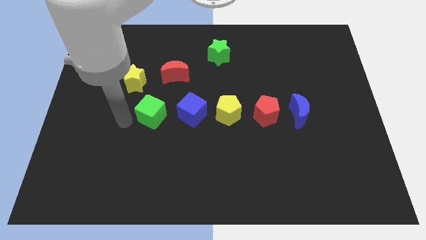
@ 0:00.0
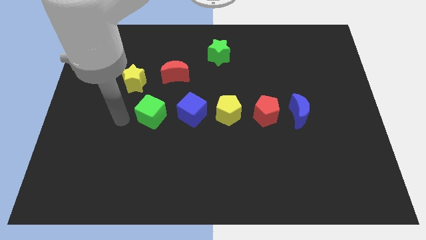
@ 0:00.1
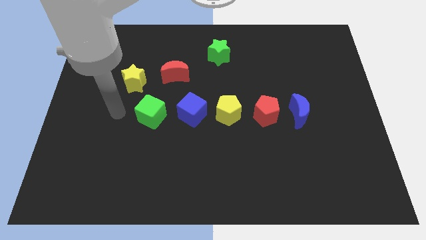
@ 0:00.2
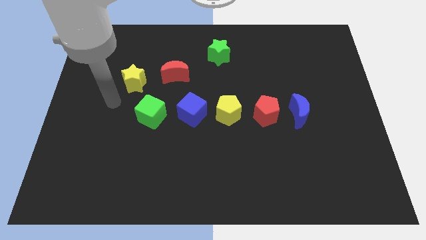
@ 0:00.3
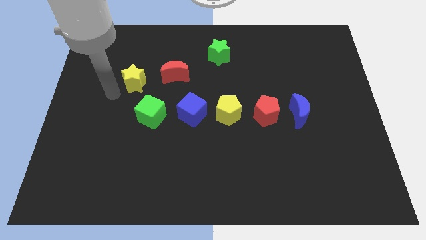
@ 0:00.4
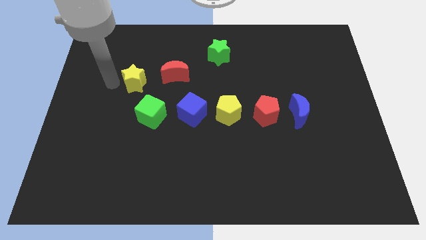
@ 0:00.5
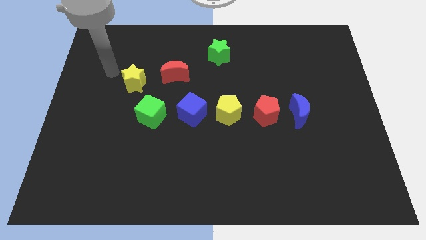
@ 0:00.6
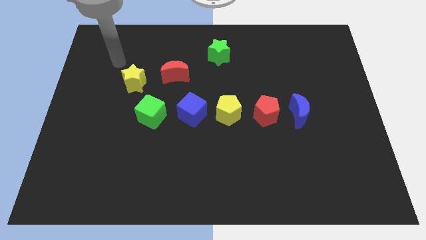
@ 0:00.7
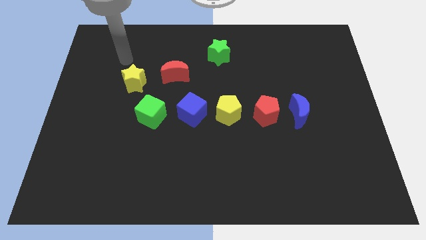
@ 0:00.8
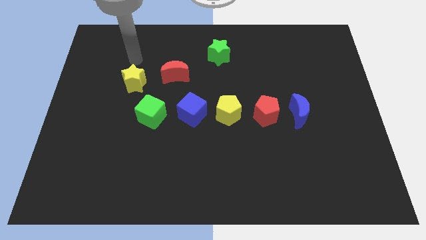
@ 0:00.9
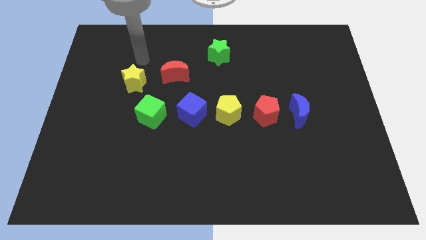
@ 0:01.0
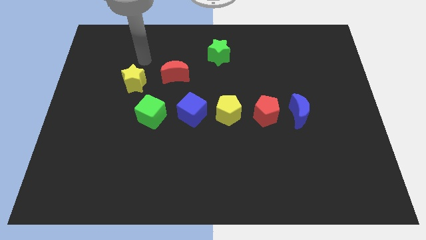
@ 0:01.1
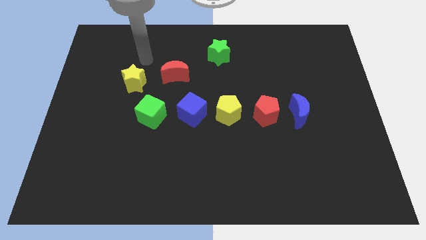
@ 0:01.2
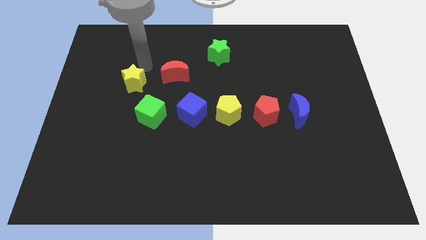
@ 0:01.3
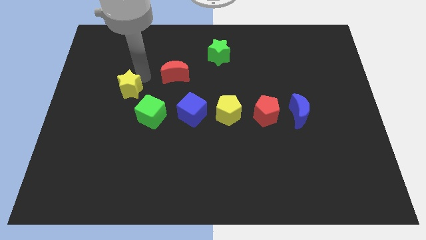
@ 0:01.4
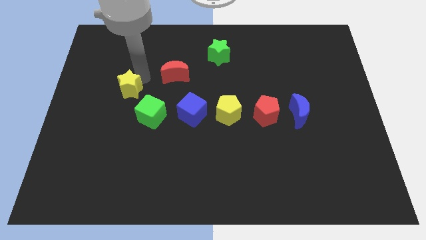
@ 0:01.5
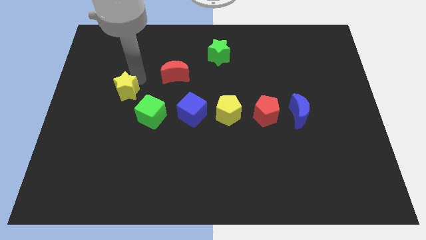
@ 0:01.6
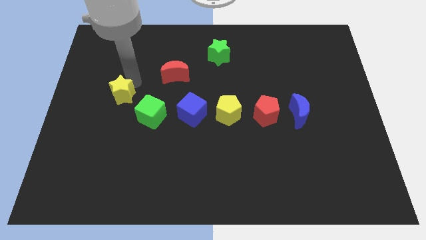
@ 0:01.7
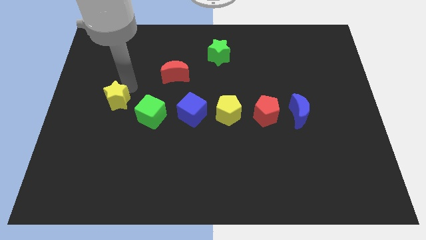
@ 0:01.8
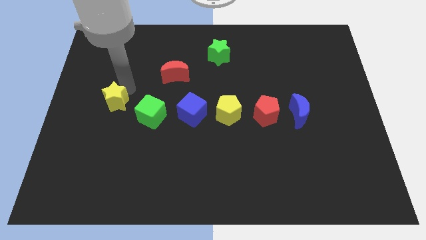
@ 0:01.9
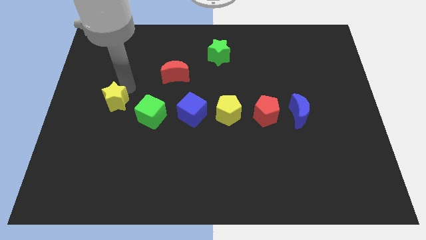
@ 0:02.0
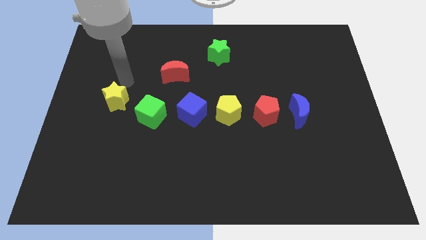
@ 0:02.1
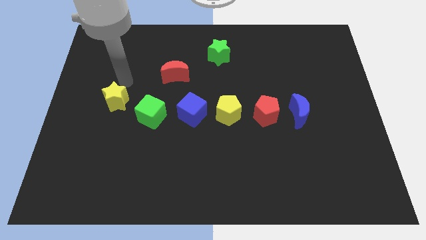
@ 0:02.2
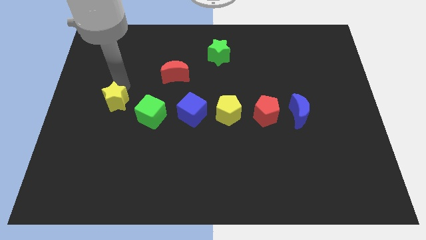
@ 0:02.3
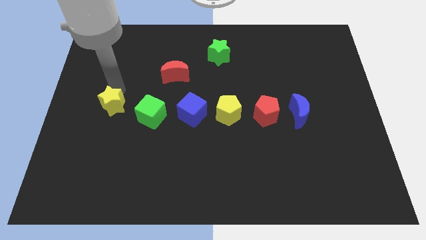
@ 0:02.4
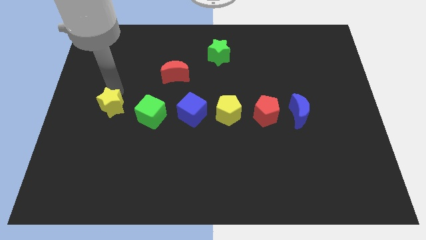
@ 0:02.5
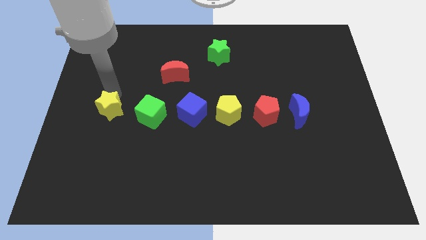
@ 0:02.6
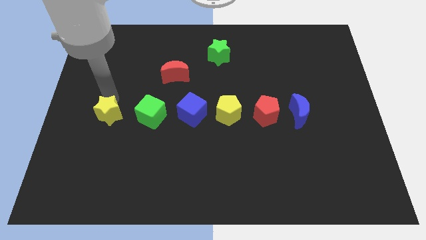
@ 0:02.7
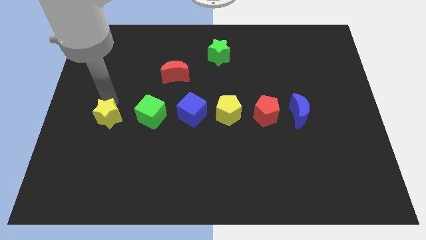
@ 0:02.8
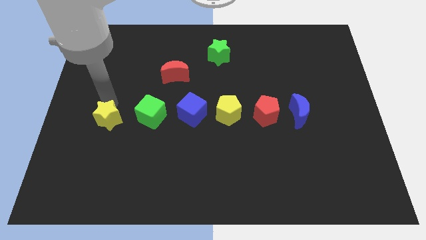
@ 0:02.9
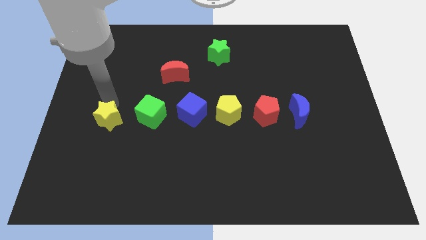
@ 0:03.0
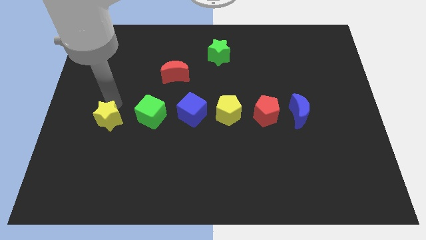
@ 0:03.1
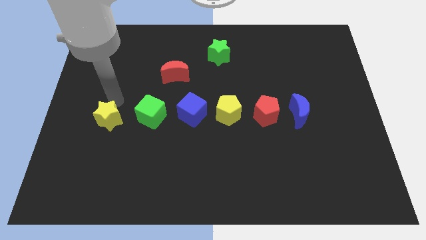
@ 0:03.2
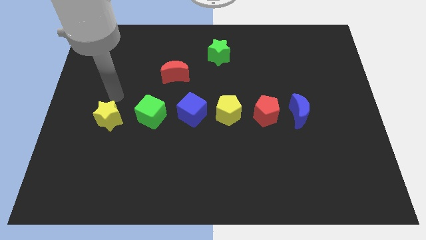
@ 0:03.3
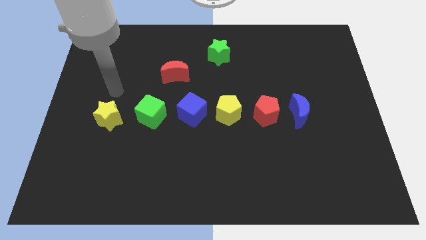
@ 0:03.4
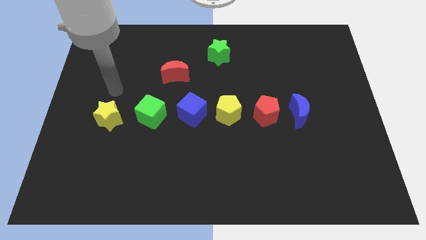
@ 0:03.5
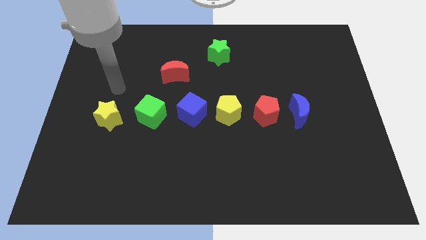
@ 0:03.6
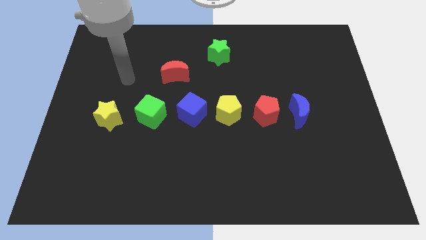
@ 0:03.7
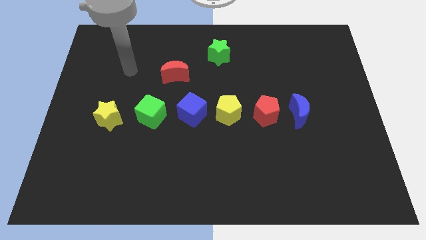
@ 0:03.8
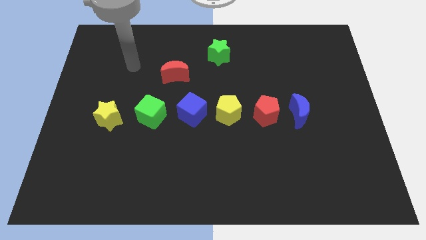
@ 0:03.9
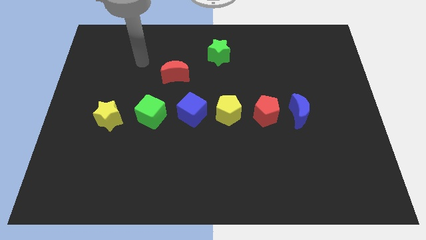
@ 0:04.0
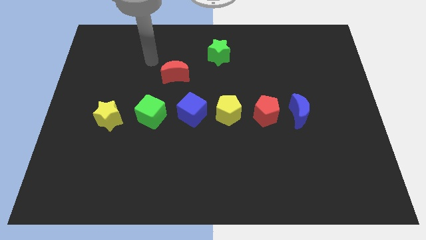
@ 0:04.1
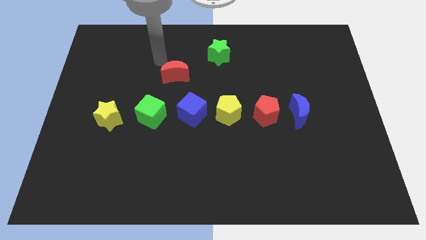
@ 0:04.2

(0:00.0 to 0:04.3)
push yellow star to the left of green cube

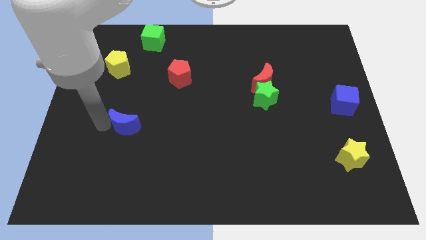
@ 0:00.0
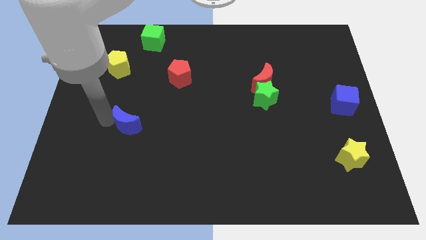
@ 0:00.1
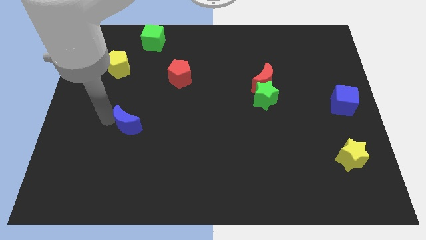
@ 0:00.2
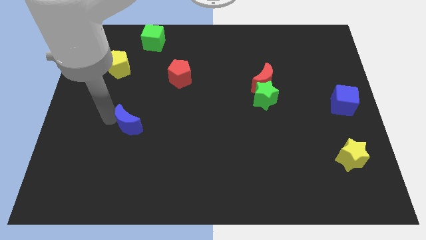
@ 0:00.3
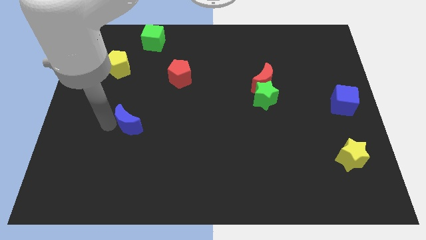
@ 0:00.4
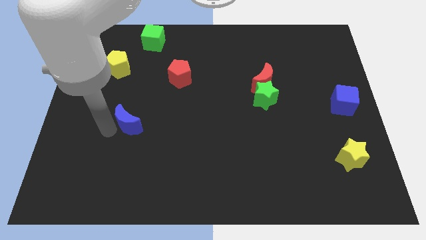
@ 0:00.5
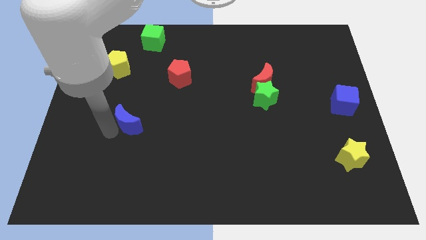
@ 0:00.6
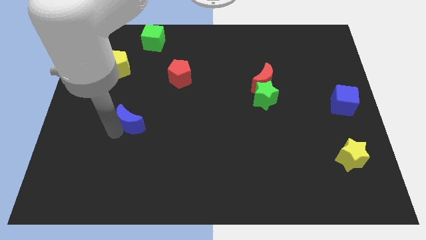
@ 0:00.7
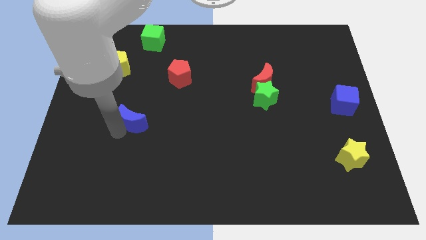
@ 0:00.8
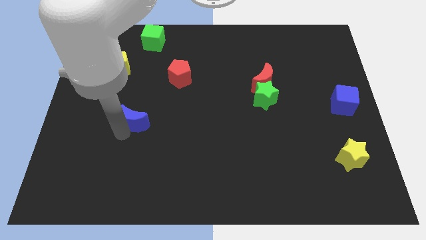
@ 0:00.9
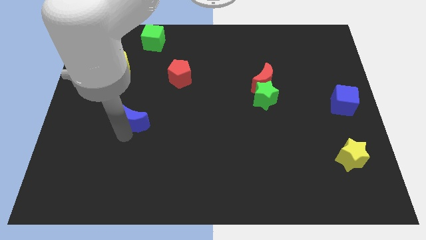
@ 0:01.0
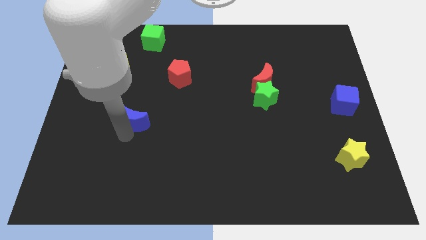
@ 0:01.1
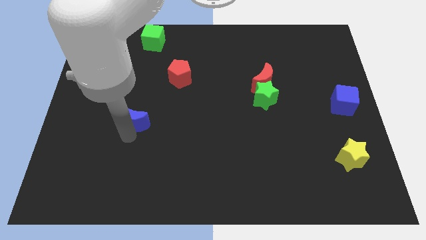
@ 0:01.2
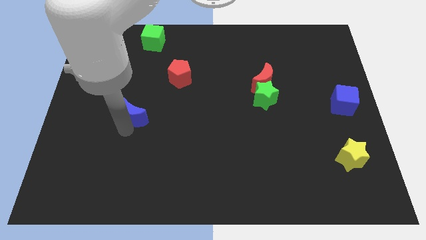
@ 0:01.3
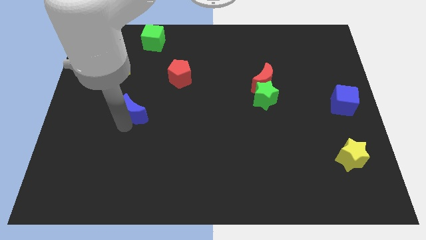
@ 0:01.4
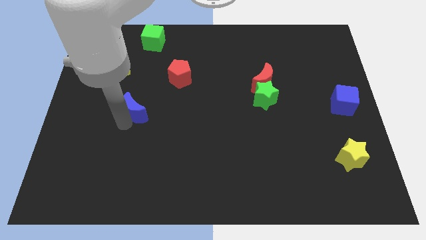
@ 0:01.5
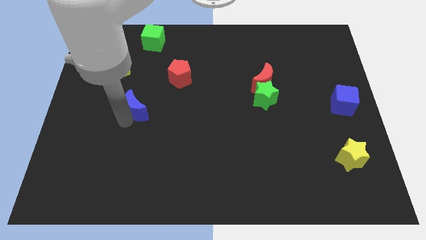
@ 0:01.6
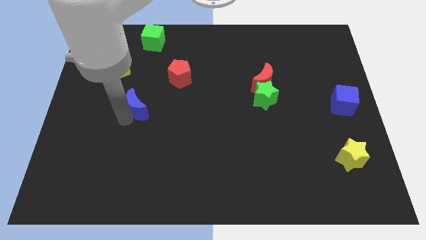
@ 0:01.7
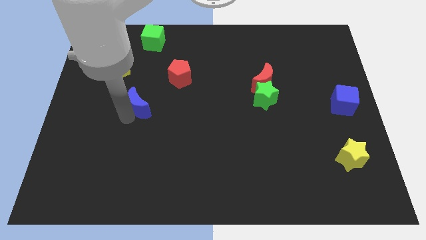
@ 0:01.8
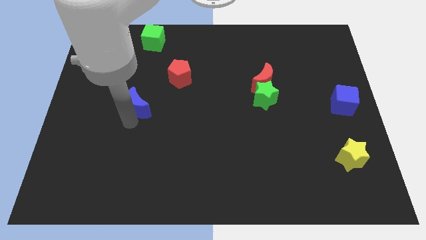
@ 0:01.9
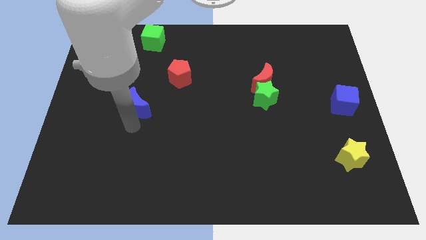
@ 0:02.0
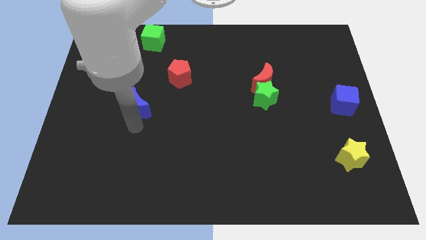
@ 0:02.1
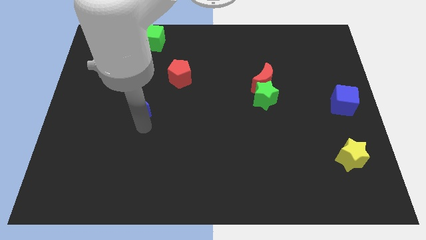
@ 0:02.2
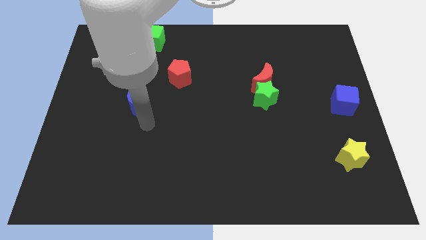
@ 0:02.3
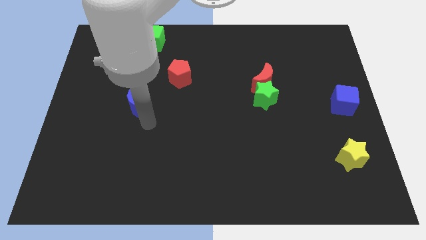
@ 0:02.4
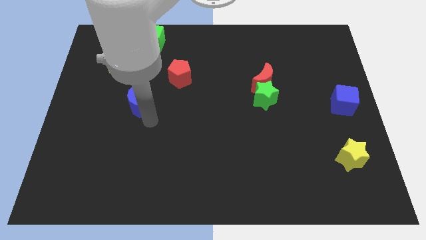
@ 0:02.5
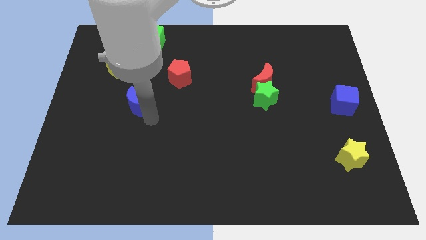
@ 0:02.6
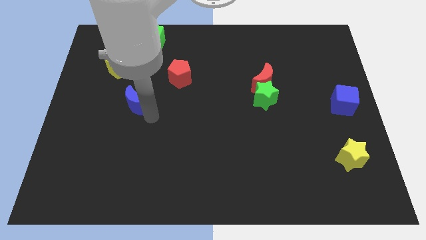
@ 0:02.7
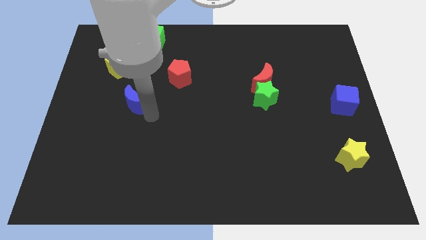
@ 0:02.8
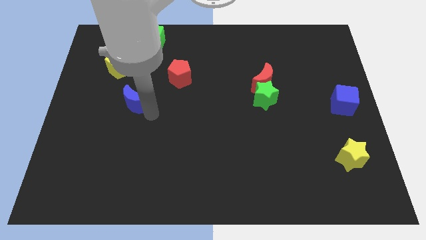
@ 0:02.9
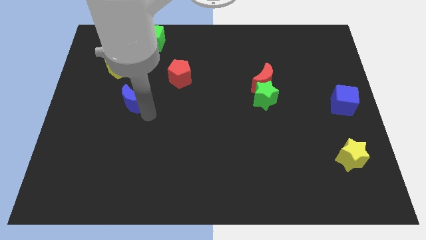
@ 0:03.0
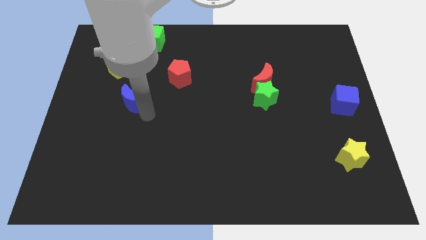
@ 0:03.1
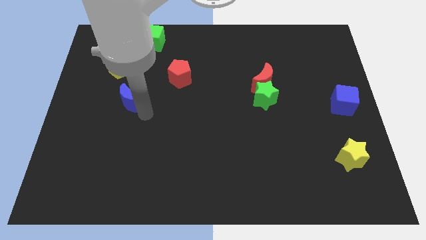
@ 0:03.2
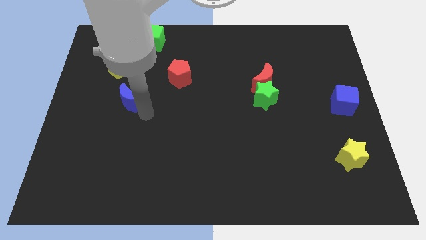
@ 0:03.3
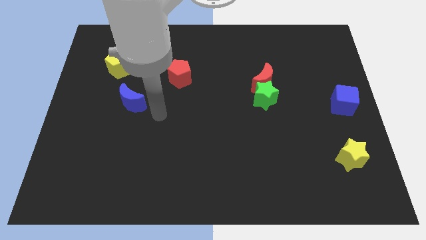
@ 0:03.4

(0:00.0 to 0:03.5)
move the blue crescent near the yellow pentagon

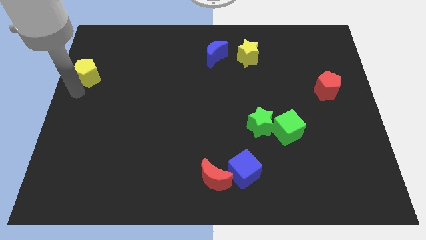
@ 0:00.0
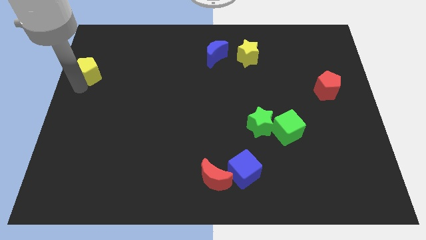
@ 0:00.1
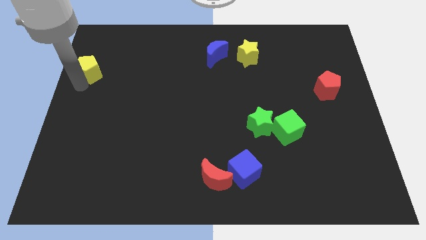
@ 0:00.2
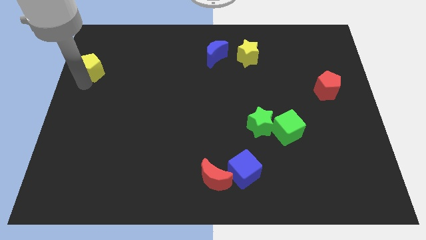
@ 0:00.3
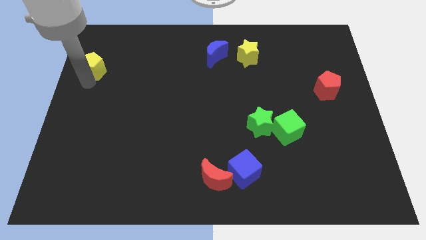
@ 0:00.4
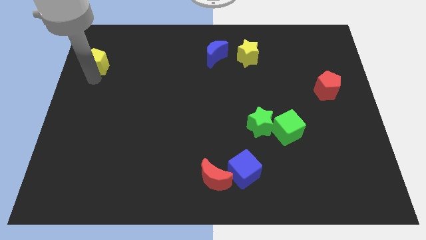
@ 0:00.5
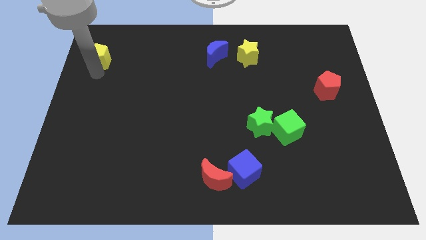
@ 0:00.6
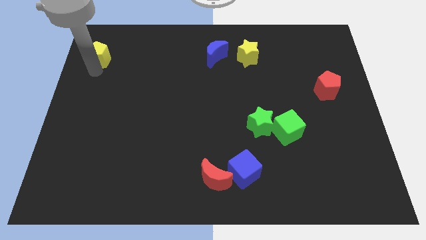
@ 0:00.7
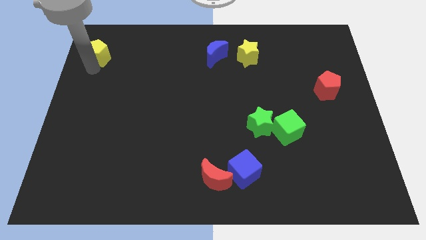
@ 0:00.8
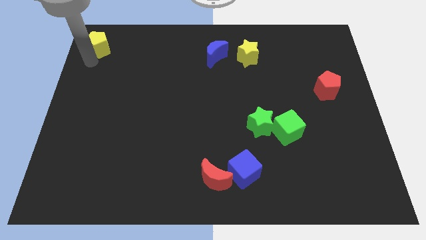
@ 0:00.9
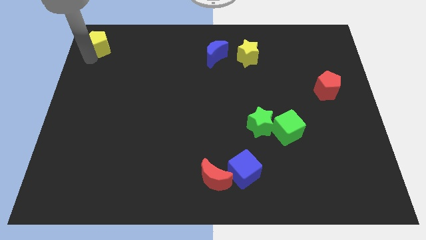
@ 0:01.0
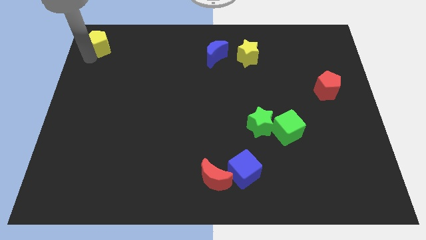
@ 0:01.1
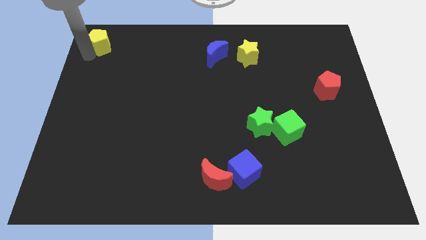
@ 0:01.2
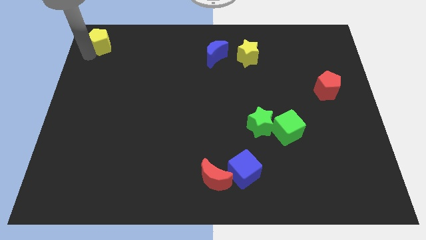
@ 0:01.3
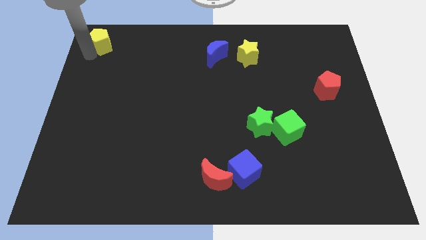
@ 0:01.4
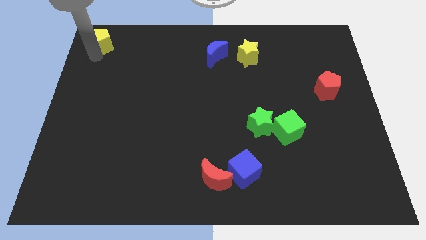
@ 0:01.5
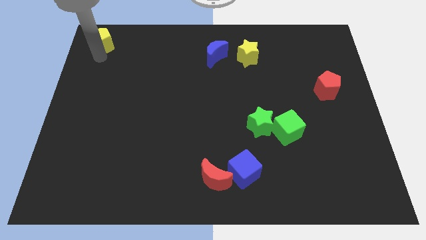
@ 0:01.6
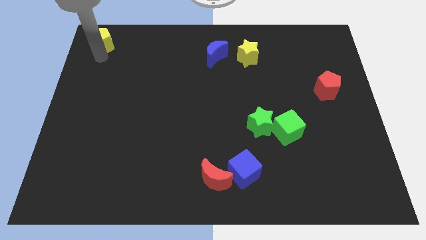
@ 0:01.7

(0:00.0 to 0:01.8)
push the yellow pentagon to the top left corner
